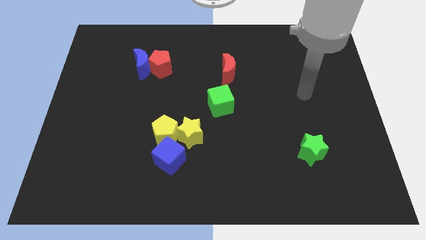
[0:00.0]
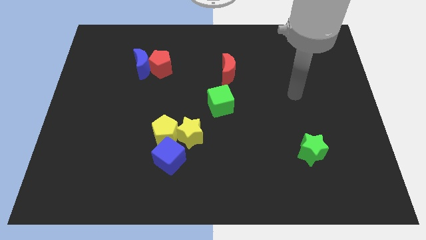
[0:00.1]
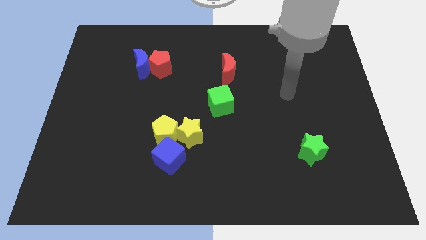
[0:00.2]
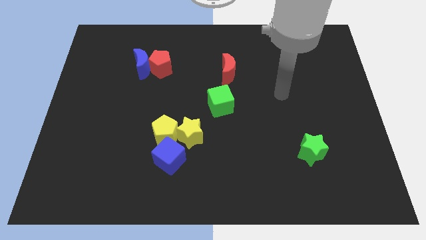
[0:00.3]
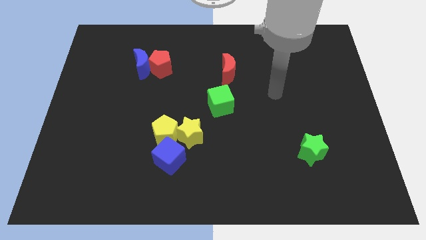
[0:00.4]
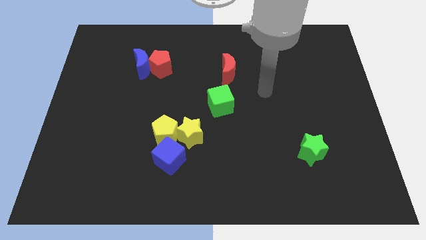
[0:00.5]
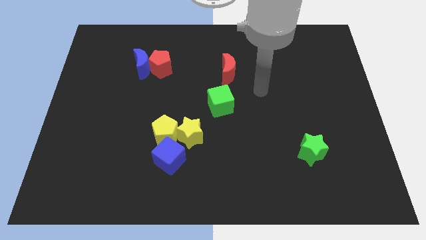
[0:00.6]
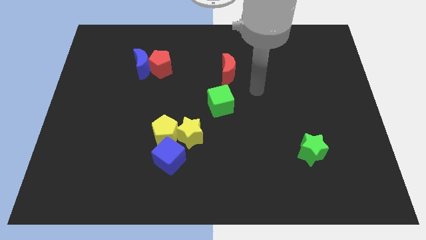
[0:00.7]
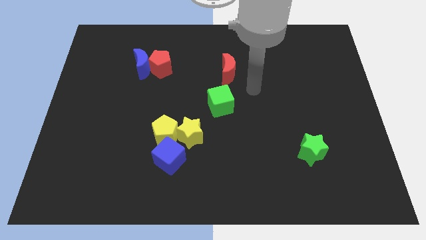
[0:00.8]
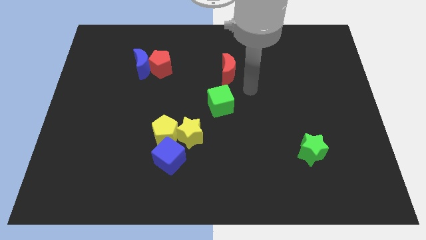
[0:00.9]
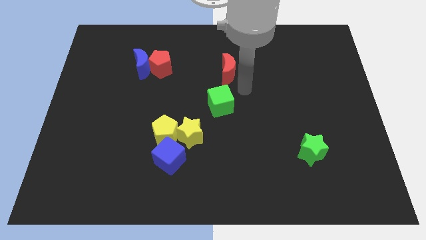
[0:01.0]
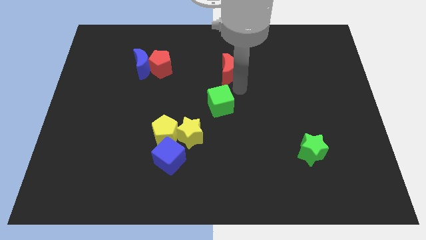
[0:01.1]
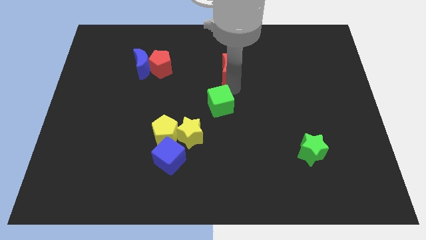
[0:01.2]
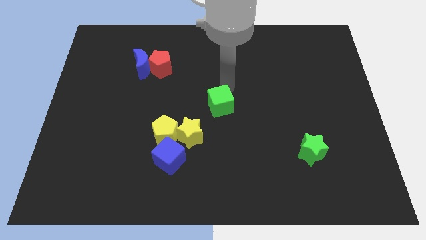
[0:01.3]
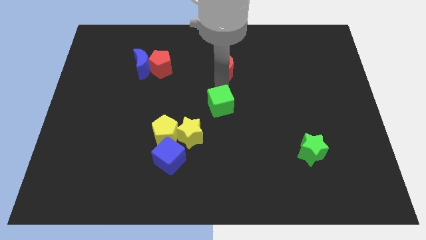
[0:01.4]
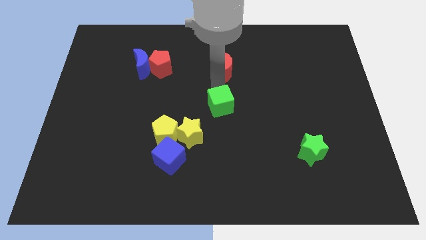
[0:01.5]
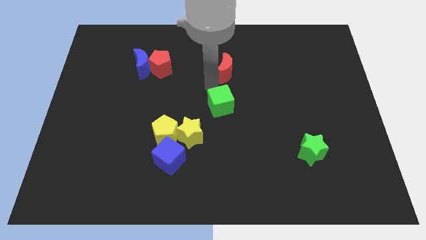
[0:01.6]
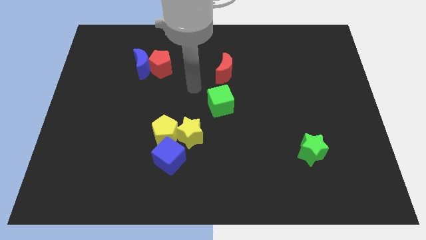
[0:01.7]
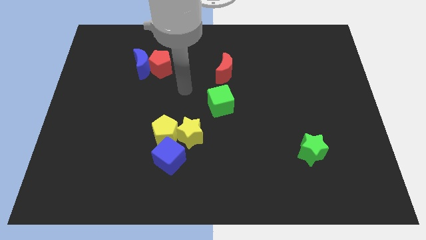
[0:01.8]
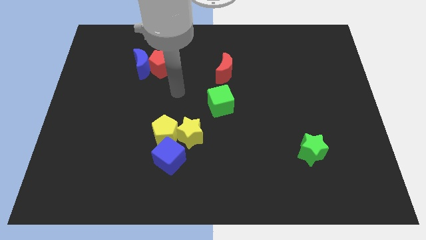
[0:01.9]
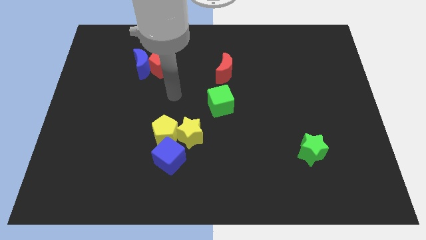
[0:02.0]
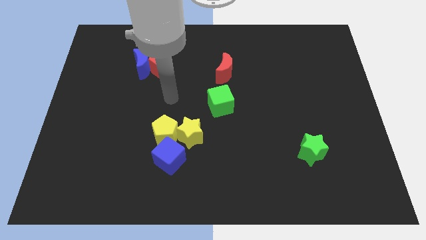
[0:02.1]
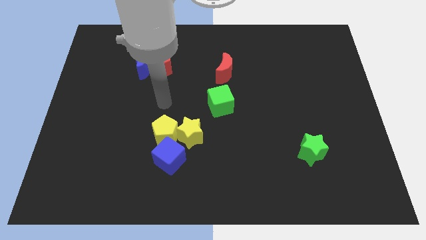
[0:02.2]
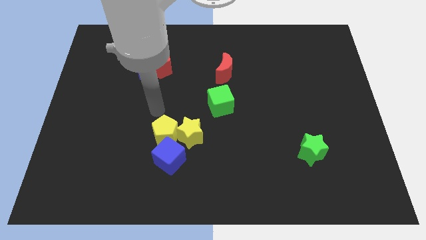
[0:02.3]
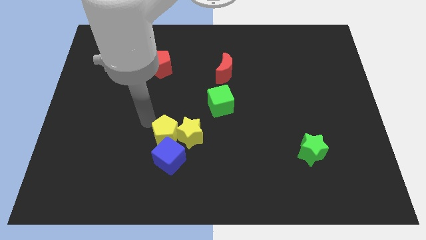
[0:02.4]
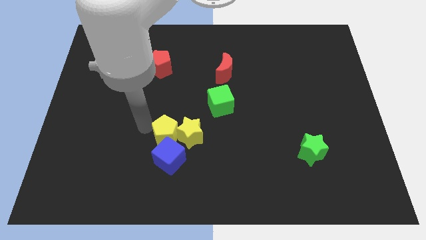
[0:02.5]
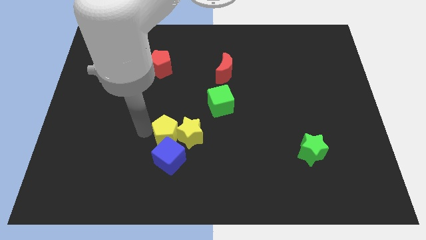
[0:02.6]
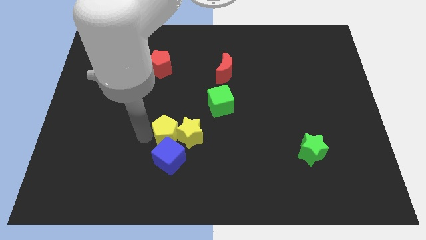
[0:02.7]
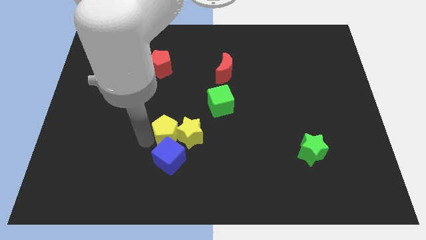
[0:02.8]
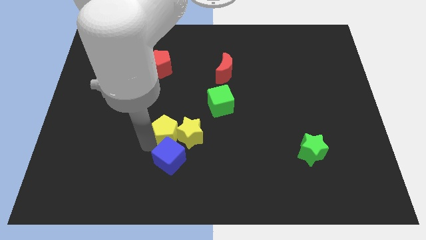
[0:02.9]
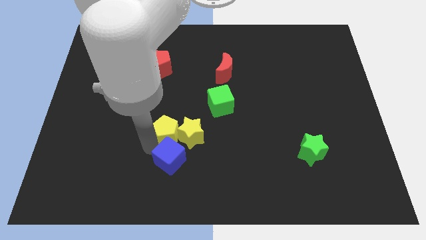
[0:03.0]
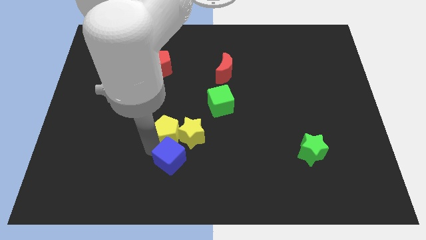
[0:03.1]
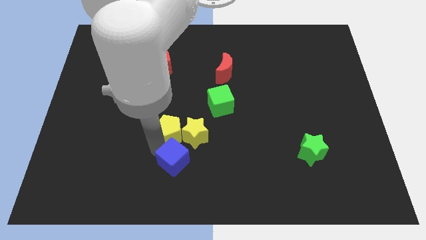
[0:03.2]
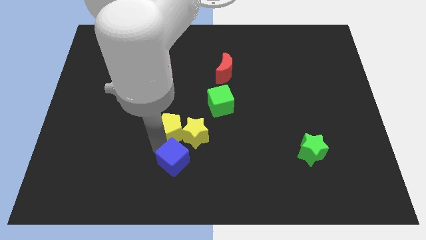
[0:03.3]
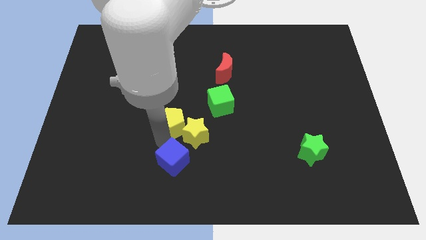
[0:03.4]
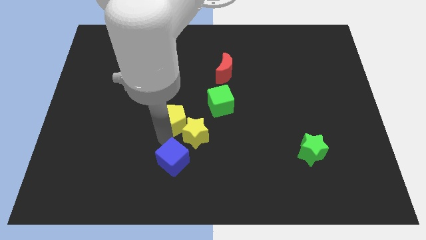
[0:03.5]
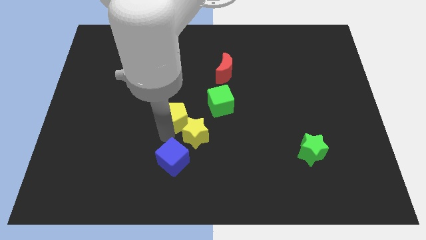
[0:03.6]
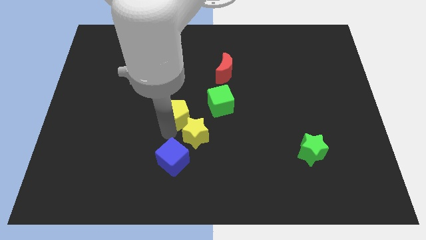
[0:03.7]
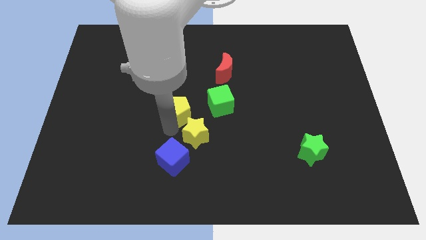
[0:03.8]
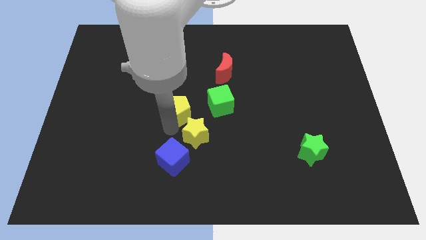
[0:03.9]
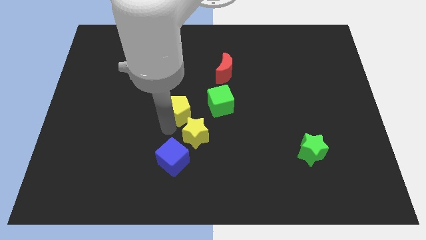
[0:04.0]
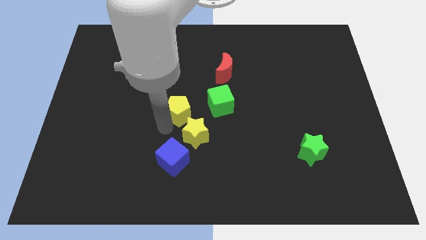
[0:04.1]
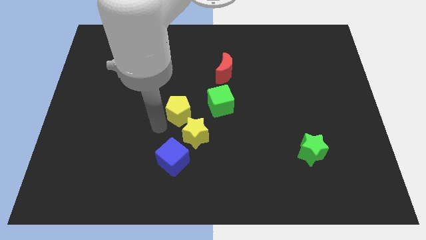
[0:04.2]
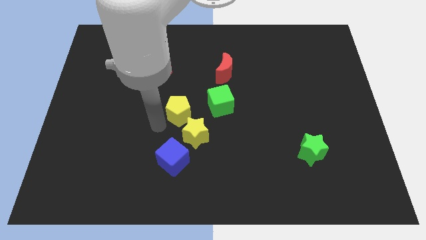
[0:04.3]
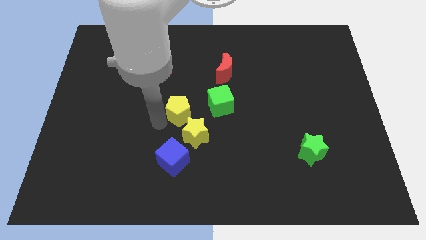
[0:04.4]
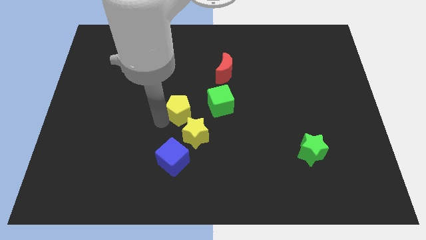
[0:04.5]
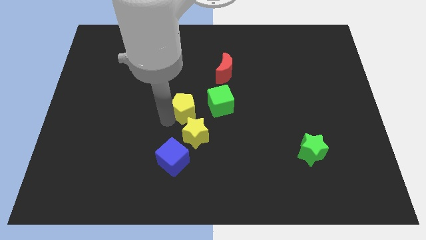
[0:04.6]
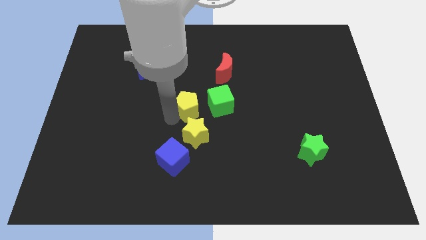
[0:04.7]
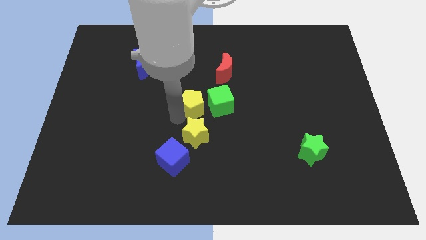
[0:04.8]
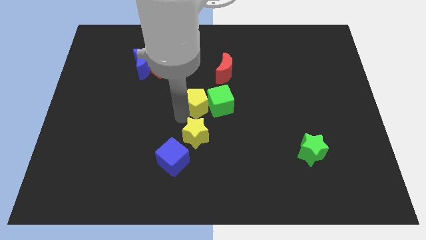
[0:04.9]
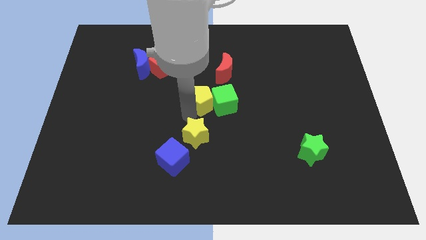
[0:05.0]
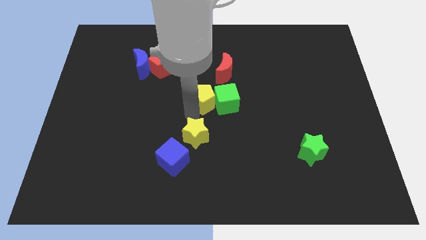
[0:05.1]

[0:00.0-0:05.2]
put the yellow pentagon towards the green cube

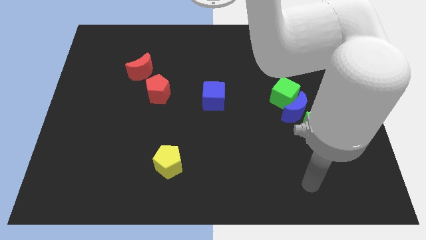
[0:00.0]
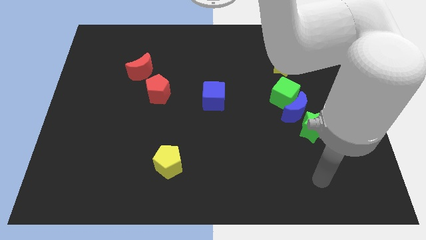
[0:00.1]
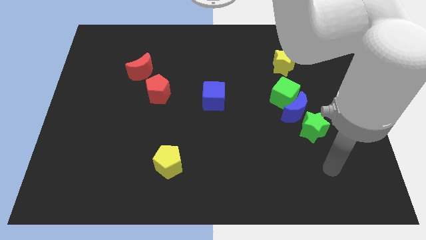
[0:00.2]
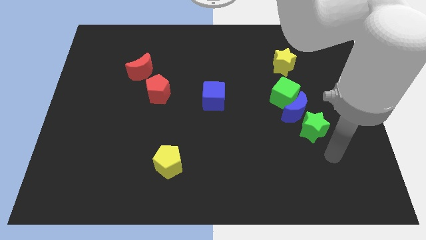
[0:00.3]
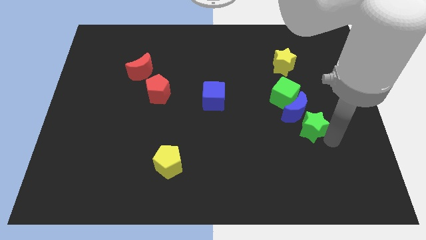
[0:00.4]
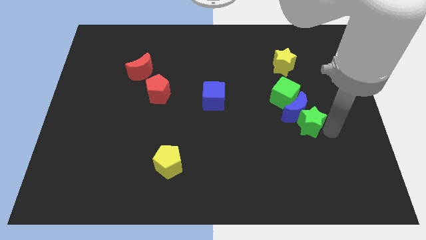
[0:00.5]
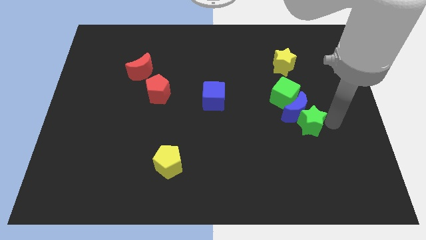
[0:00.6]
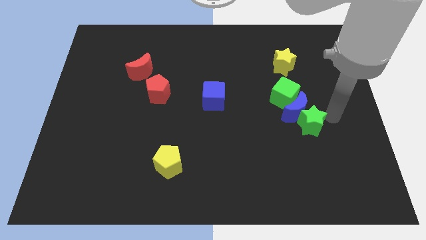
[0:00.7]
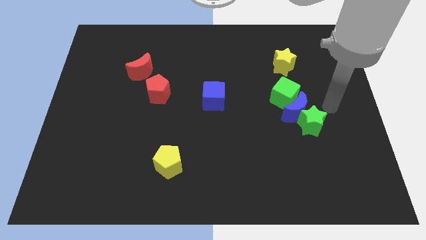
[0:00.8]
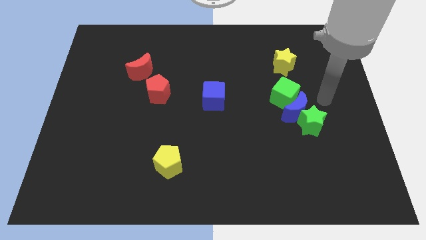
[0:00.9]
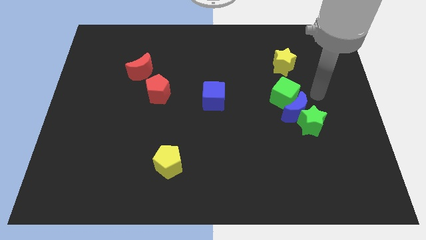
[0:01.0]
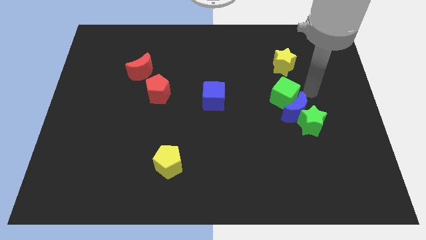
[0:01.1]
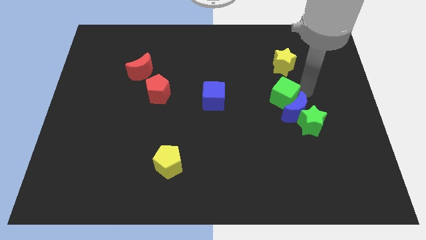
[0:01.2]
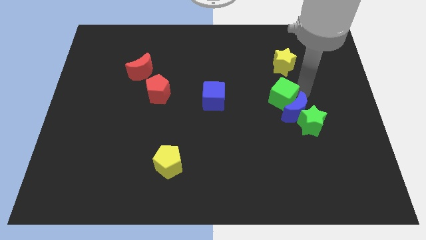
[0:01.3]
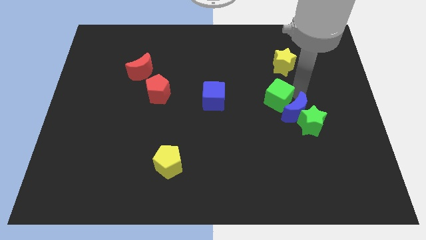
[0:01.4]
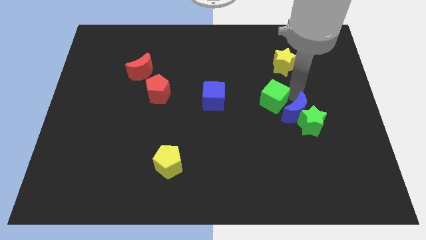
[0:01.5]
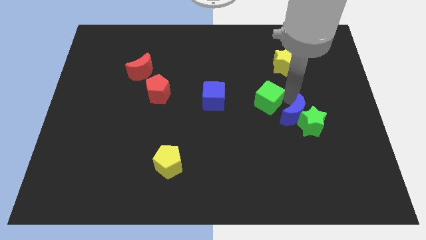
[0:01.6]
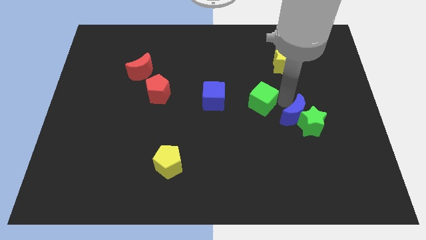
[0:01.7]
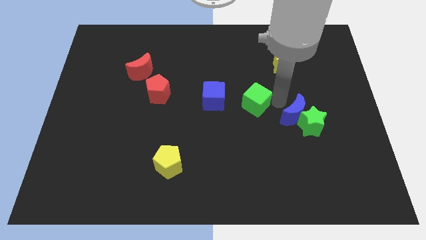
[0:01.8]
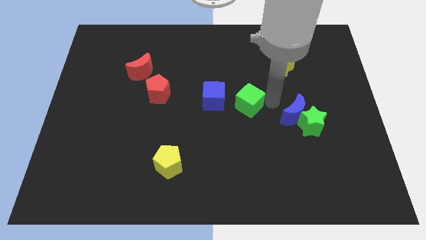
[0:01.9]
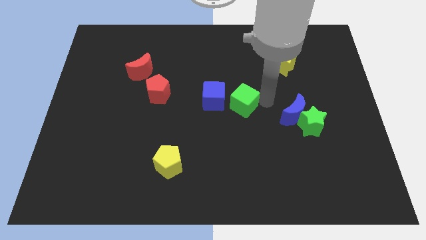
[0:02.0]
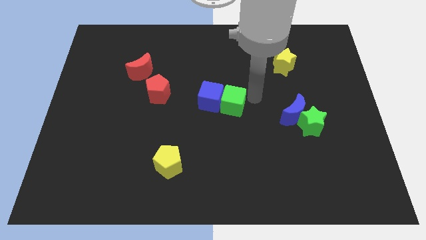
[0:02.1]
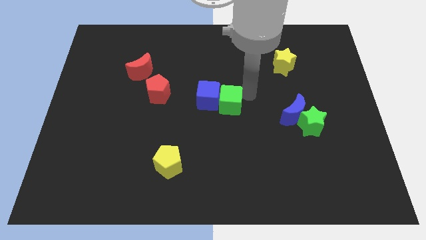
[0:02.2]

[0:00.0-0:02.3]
push the green cube next to the blue cube

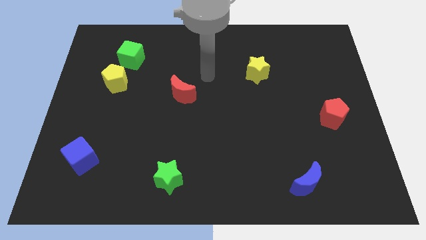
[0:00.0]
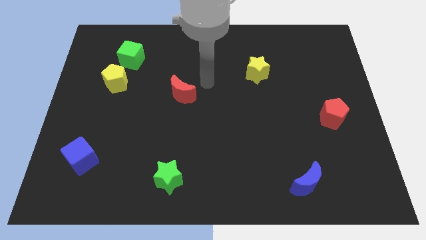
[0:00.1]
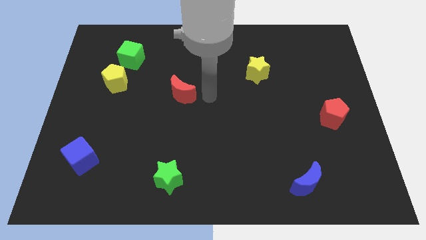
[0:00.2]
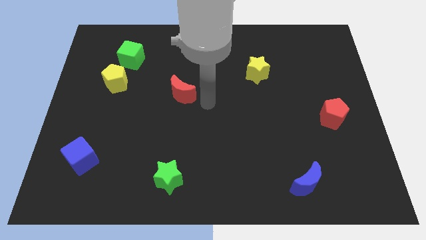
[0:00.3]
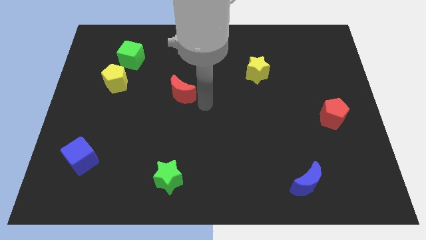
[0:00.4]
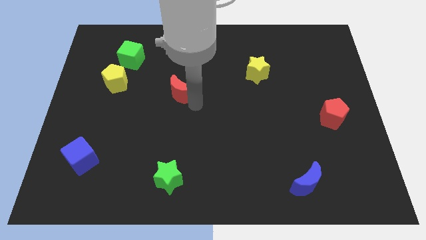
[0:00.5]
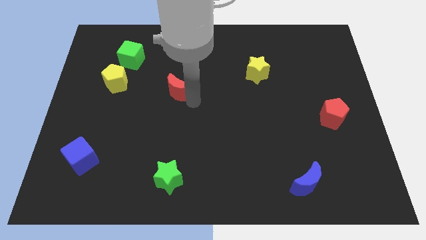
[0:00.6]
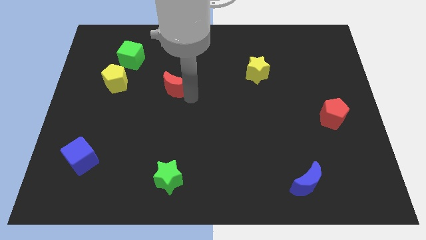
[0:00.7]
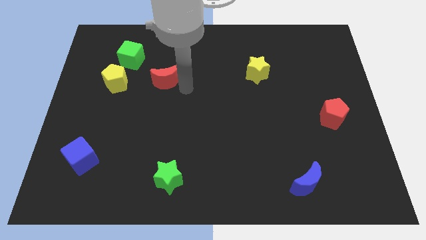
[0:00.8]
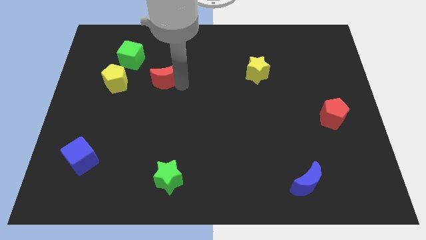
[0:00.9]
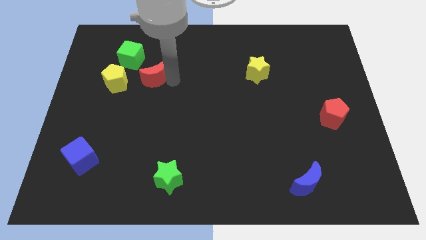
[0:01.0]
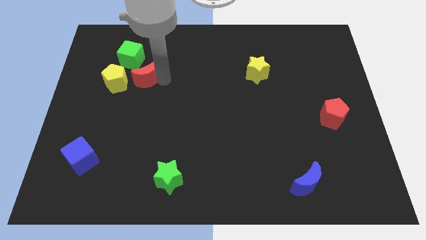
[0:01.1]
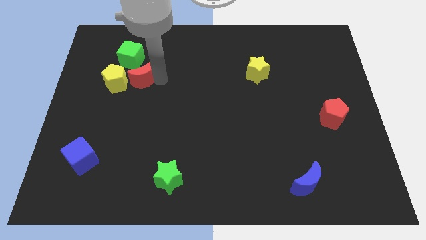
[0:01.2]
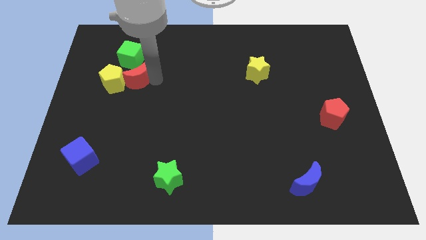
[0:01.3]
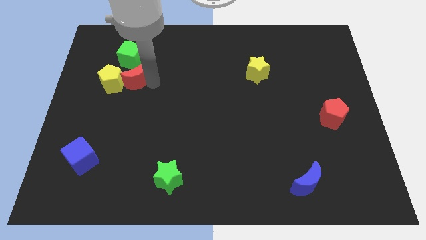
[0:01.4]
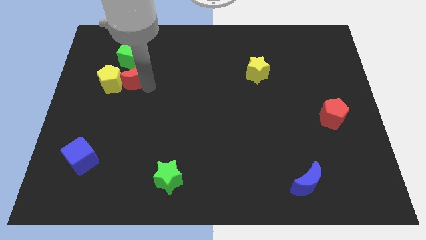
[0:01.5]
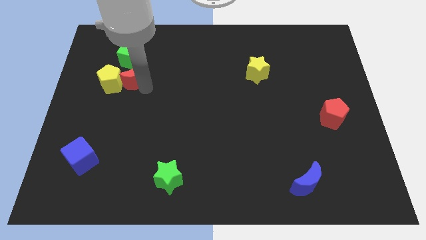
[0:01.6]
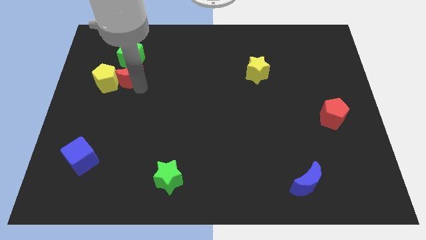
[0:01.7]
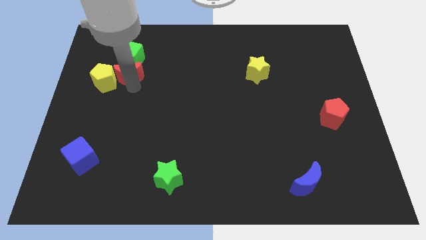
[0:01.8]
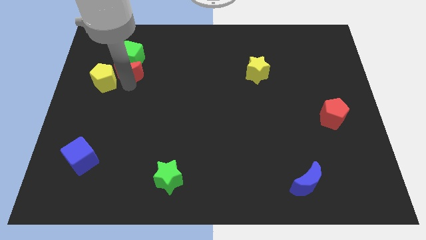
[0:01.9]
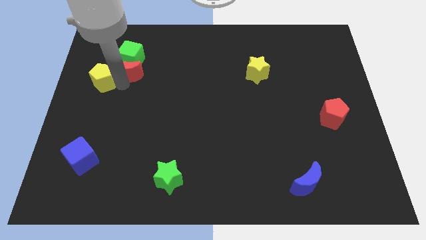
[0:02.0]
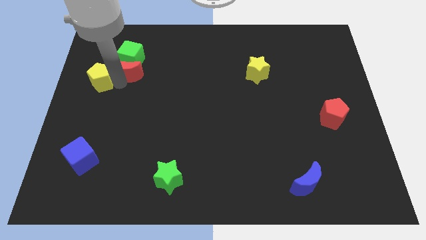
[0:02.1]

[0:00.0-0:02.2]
move the red moon close to the green cube
